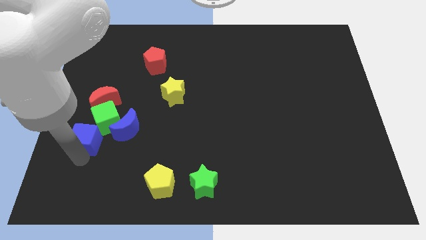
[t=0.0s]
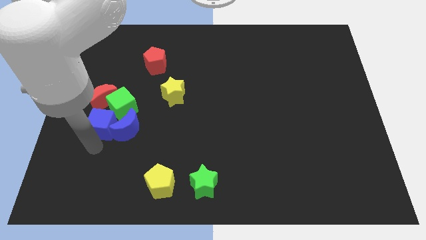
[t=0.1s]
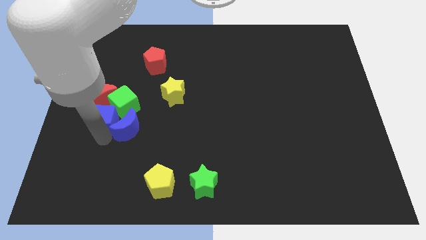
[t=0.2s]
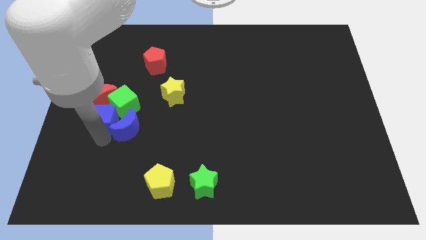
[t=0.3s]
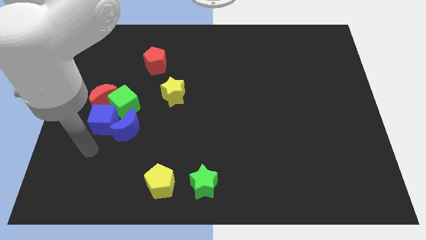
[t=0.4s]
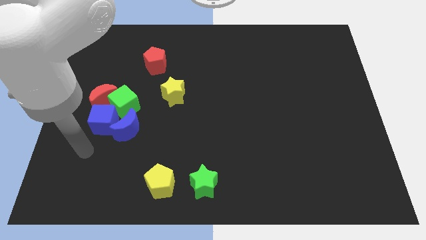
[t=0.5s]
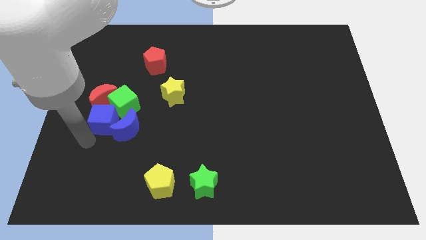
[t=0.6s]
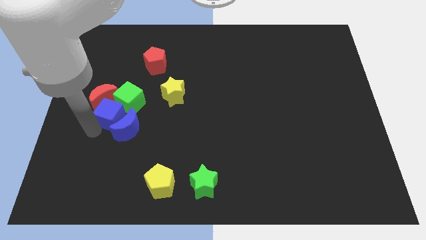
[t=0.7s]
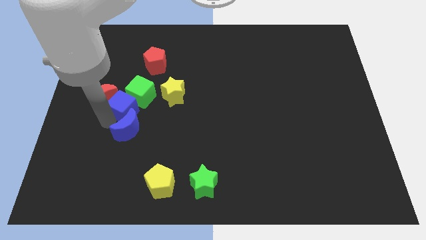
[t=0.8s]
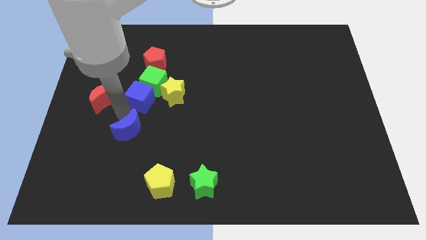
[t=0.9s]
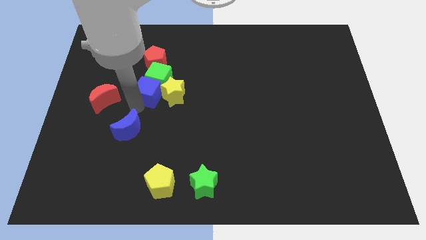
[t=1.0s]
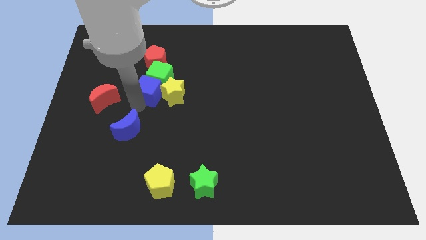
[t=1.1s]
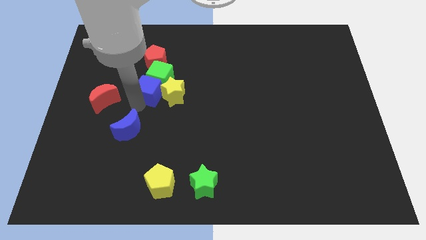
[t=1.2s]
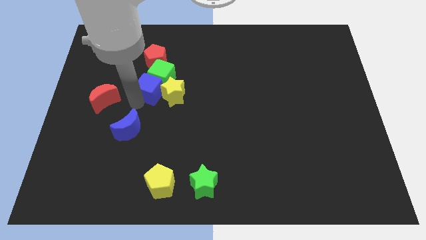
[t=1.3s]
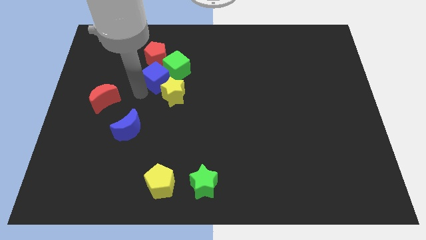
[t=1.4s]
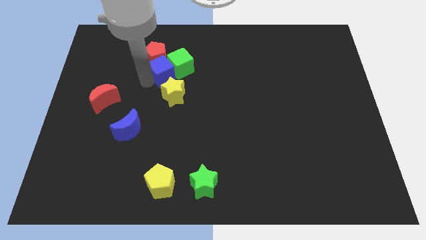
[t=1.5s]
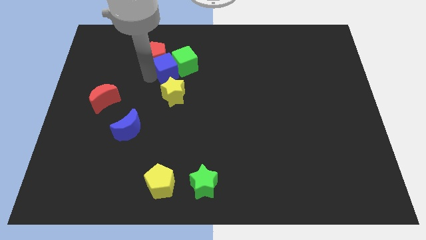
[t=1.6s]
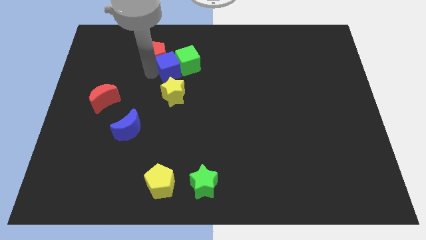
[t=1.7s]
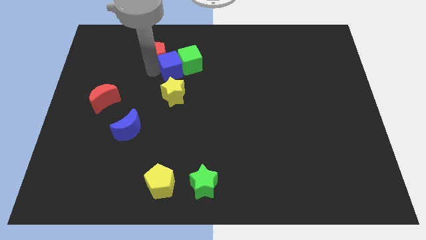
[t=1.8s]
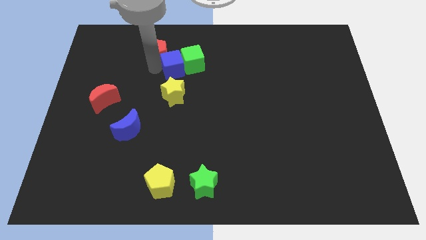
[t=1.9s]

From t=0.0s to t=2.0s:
place blue cube and green cube in between red pentagon yellow star

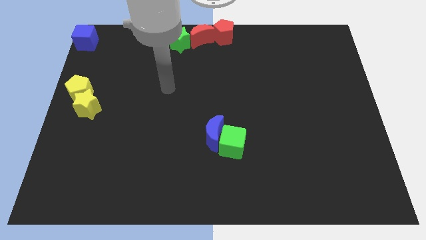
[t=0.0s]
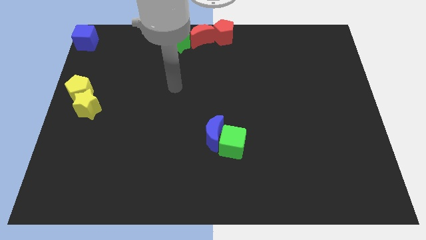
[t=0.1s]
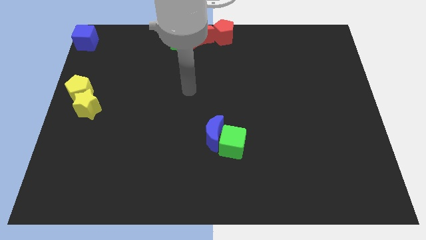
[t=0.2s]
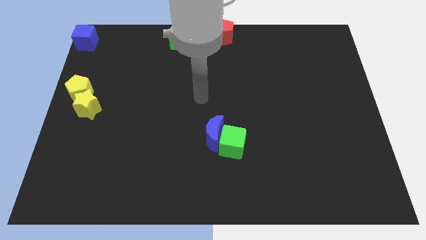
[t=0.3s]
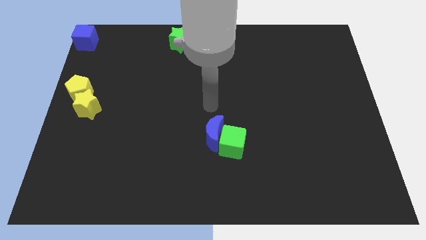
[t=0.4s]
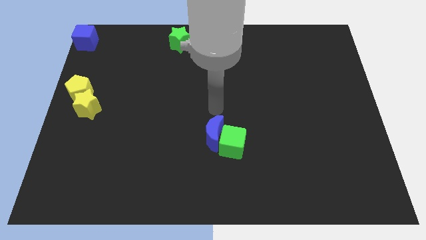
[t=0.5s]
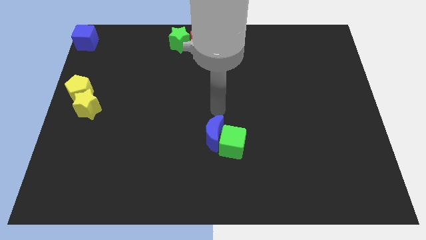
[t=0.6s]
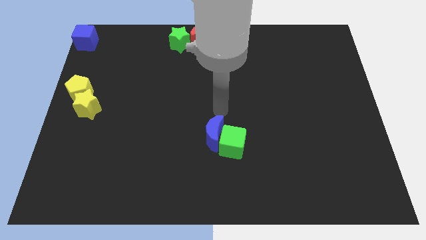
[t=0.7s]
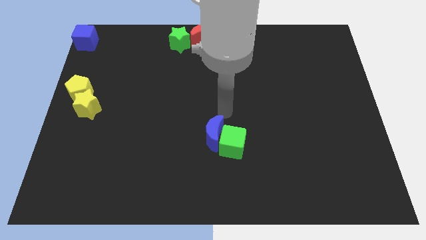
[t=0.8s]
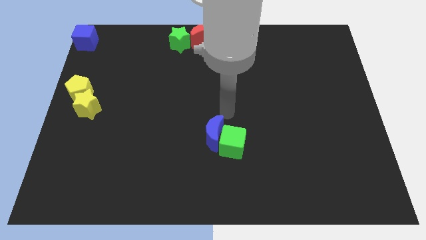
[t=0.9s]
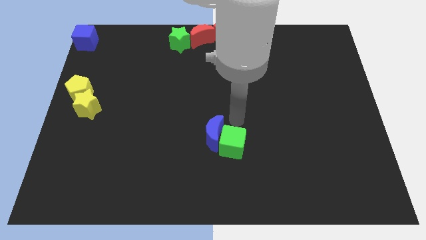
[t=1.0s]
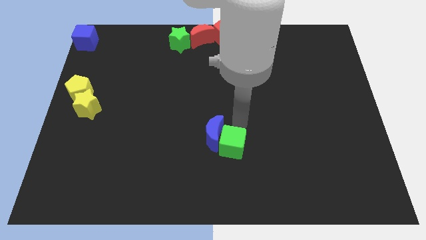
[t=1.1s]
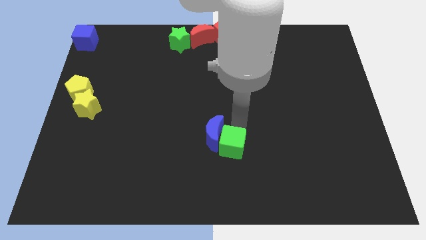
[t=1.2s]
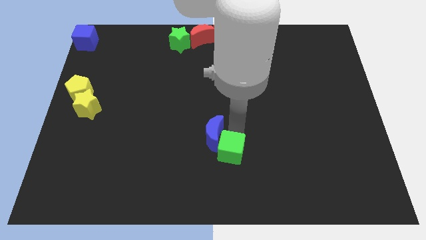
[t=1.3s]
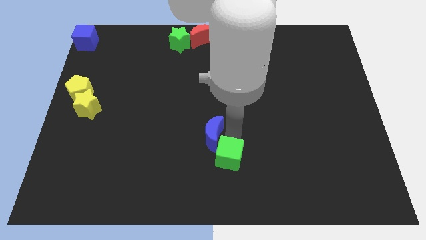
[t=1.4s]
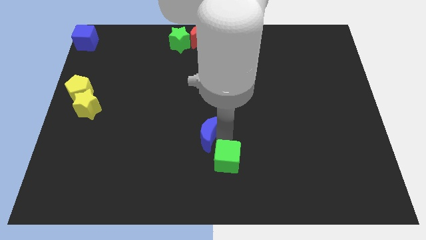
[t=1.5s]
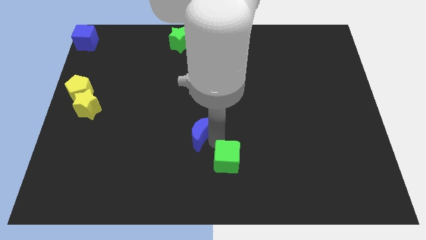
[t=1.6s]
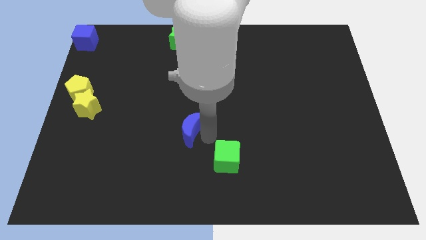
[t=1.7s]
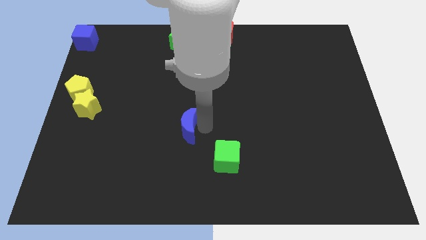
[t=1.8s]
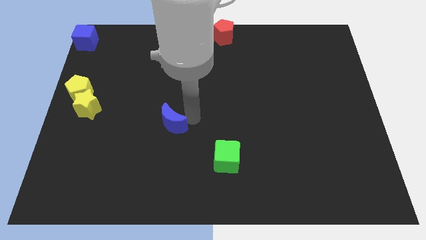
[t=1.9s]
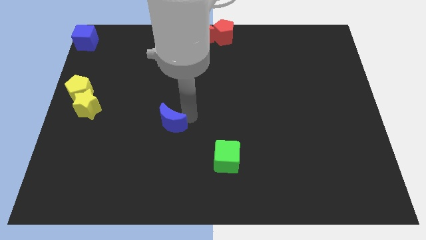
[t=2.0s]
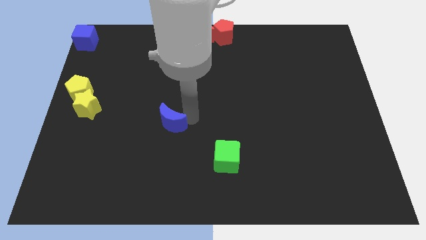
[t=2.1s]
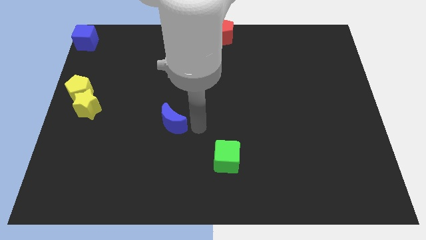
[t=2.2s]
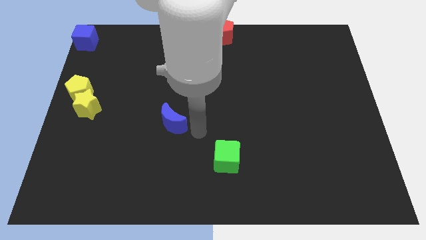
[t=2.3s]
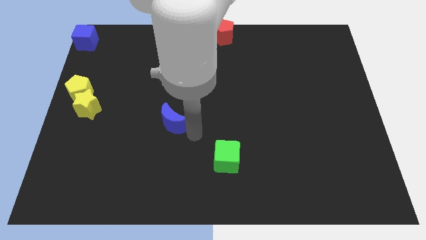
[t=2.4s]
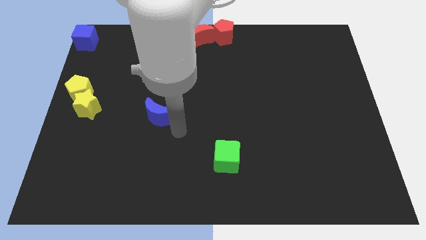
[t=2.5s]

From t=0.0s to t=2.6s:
separate the blue moon and the green cube

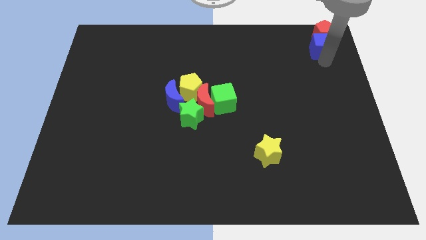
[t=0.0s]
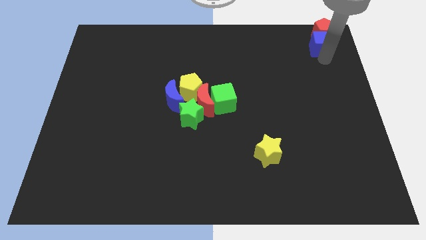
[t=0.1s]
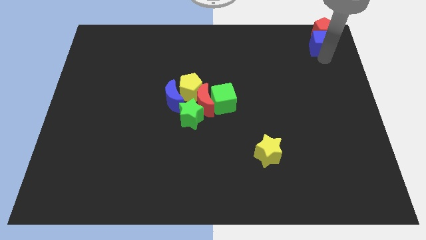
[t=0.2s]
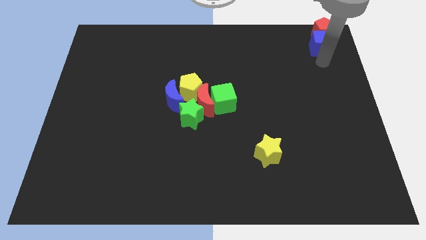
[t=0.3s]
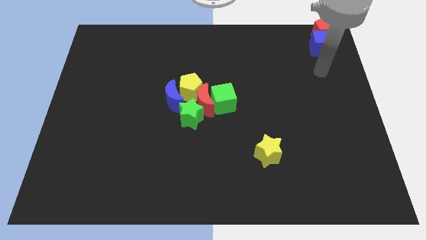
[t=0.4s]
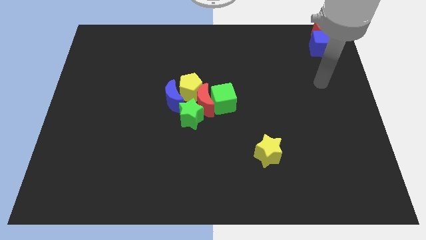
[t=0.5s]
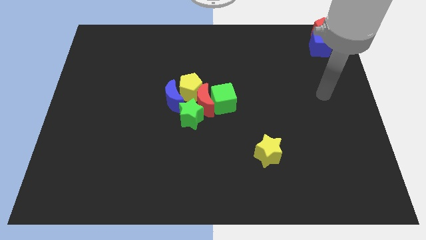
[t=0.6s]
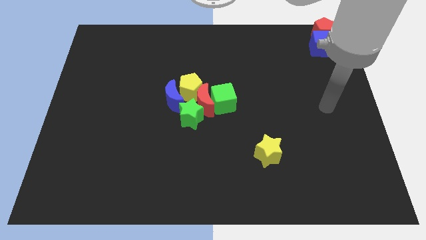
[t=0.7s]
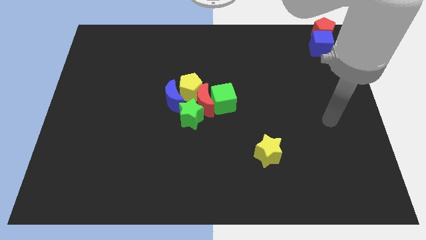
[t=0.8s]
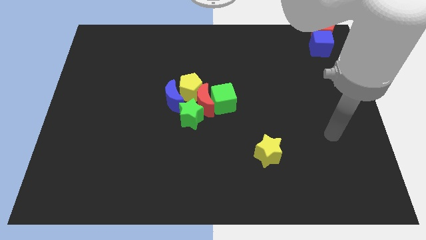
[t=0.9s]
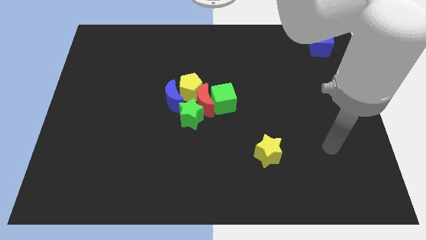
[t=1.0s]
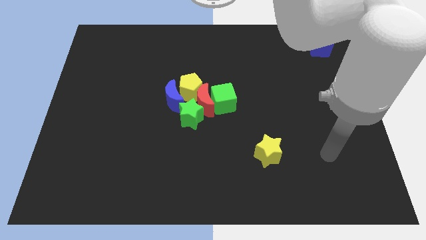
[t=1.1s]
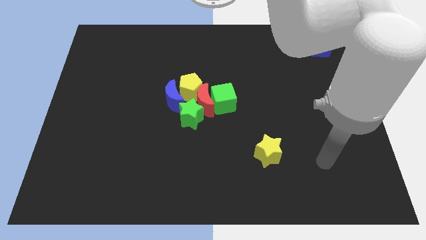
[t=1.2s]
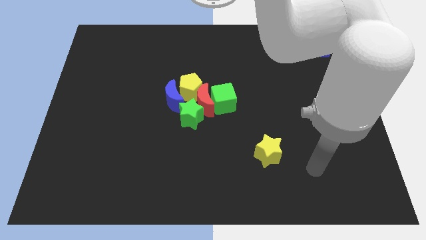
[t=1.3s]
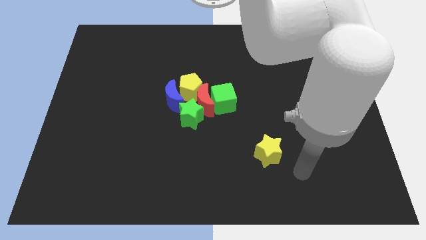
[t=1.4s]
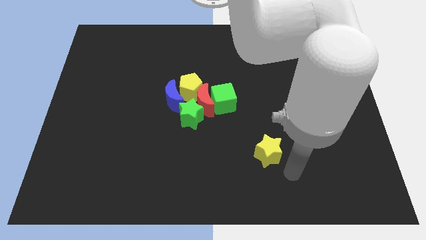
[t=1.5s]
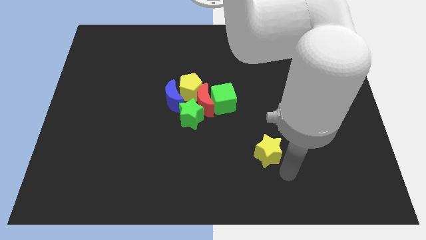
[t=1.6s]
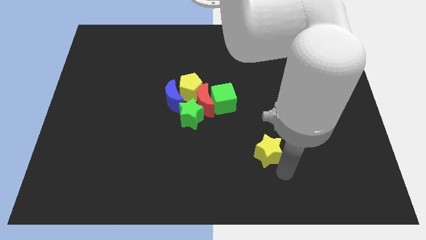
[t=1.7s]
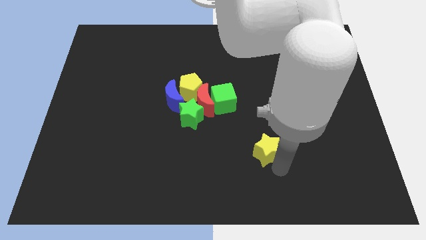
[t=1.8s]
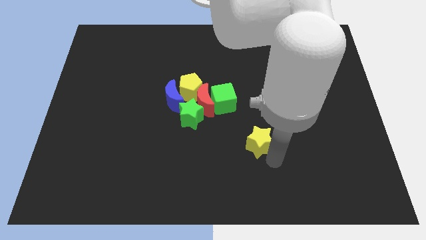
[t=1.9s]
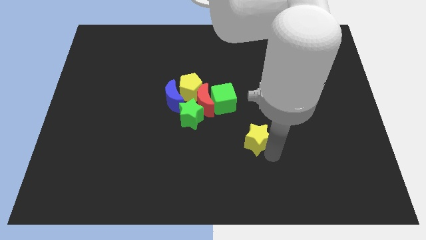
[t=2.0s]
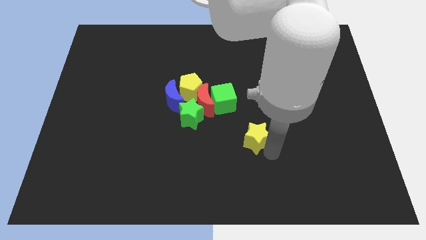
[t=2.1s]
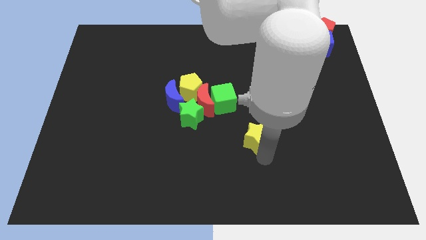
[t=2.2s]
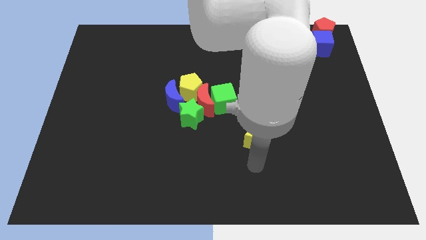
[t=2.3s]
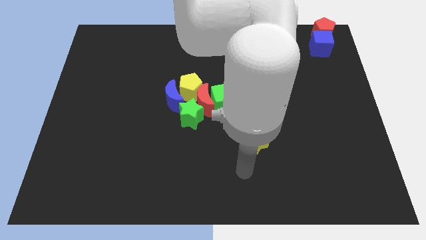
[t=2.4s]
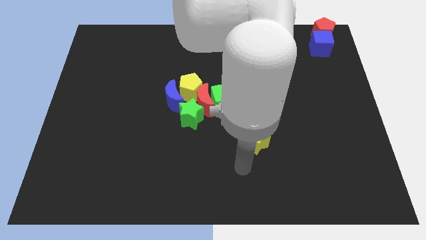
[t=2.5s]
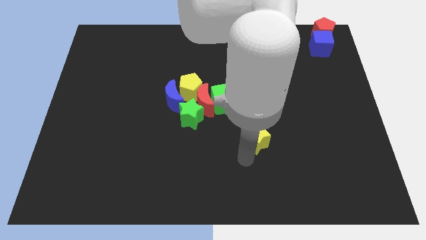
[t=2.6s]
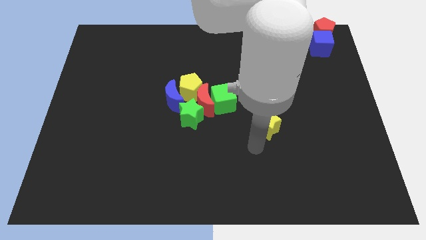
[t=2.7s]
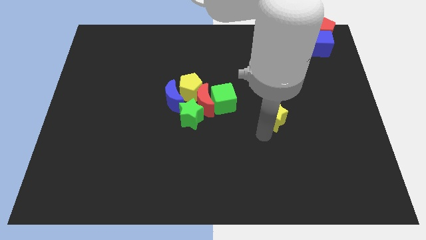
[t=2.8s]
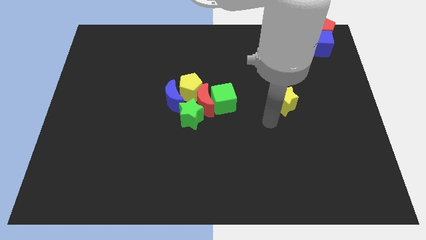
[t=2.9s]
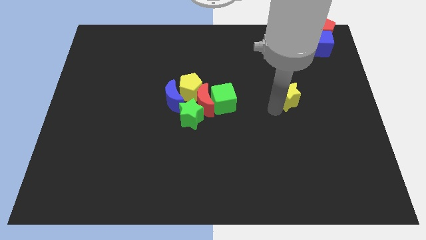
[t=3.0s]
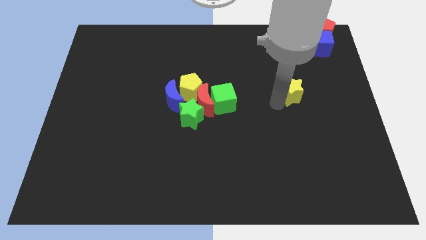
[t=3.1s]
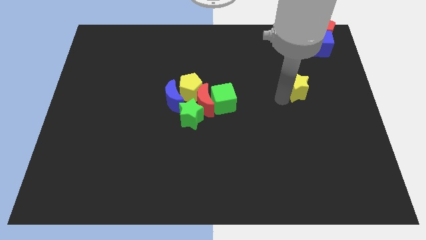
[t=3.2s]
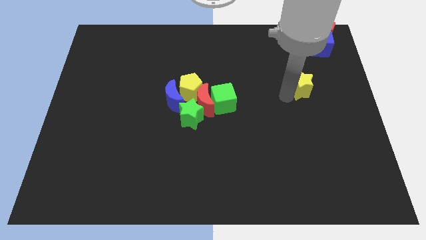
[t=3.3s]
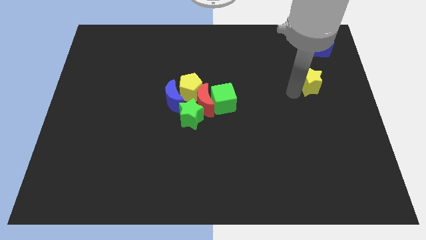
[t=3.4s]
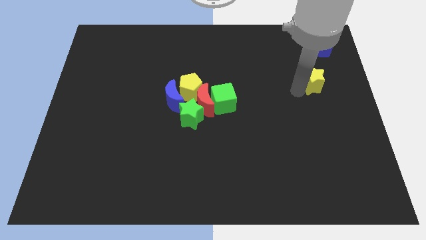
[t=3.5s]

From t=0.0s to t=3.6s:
push the yellow star towards the green cube

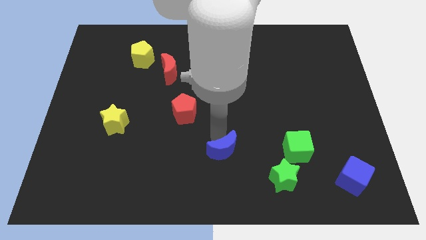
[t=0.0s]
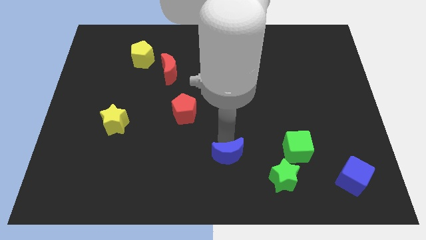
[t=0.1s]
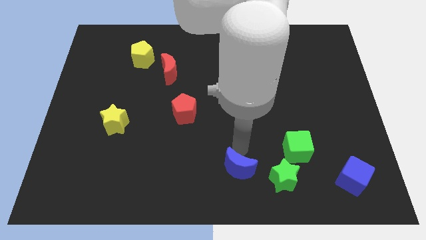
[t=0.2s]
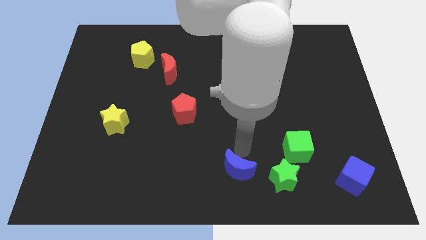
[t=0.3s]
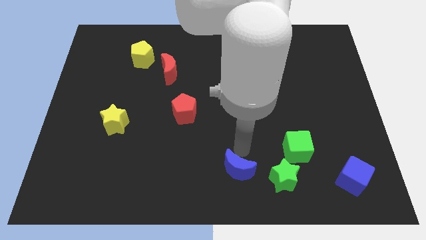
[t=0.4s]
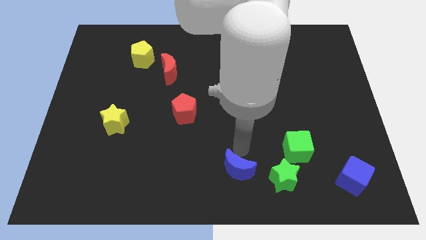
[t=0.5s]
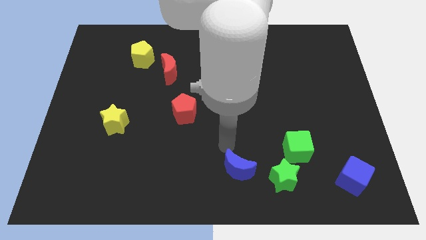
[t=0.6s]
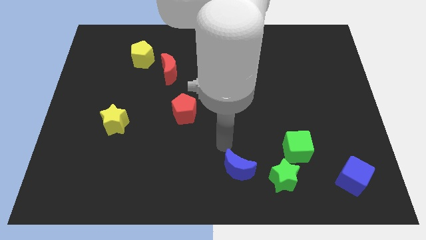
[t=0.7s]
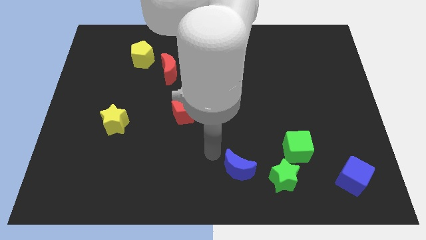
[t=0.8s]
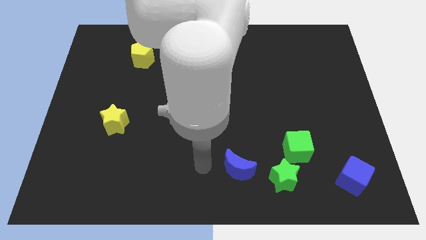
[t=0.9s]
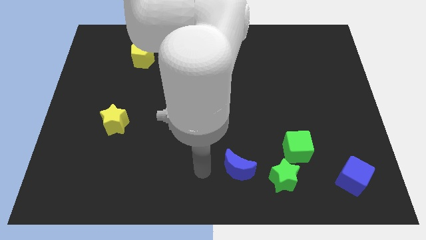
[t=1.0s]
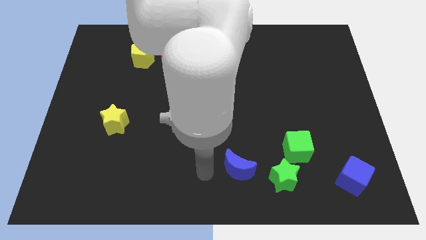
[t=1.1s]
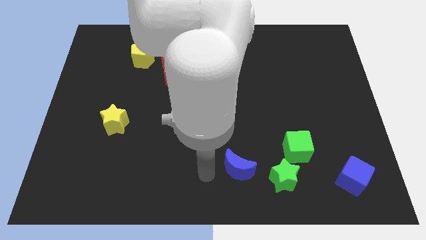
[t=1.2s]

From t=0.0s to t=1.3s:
move the blue crescent near the green star
